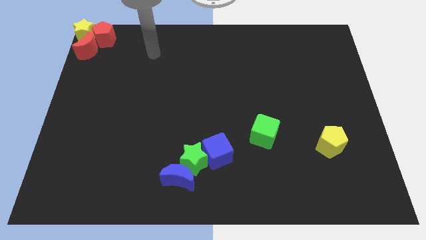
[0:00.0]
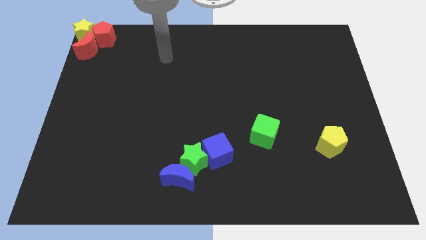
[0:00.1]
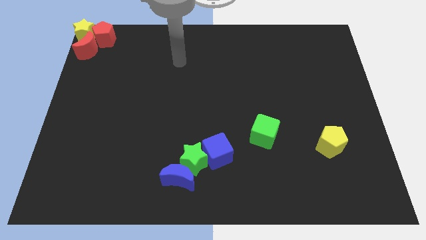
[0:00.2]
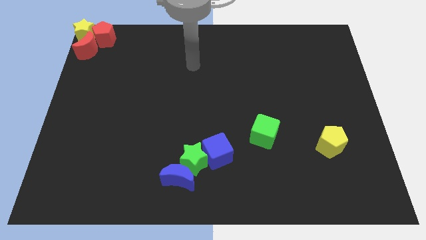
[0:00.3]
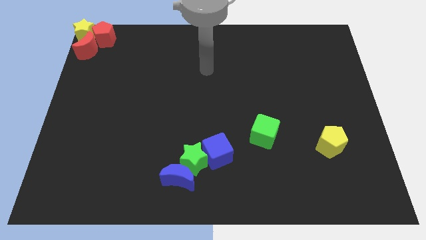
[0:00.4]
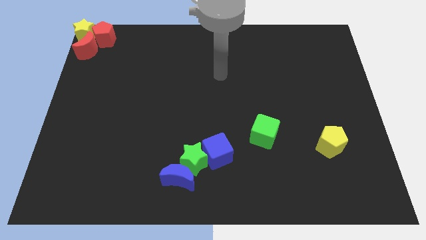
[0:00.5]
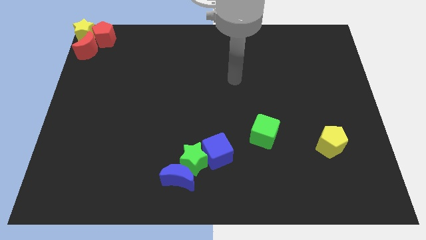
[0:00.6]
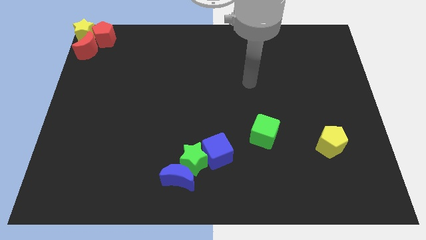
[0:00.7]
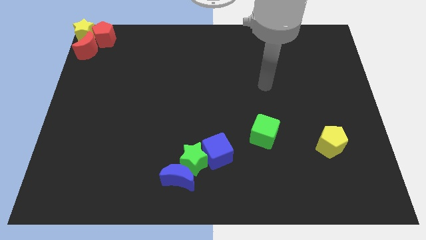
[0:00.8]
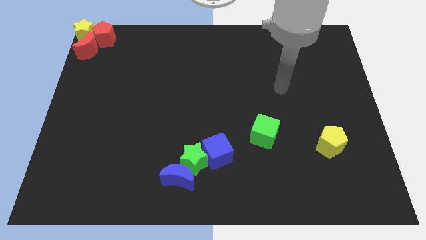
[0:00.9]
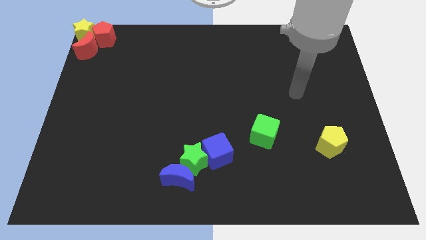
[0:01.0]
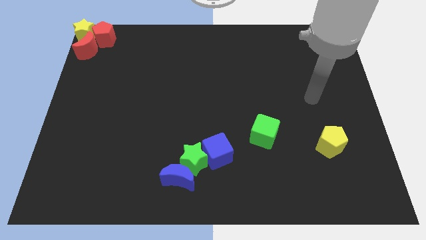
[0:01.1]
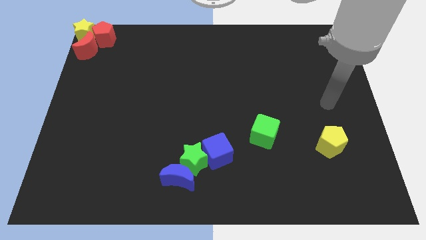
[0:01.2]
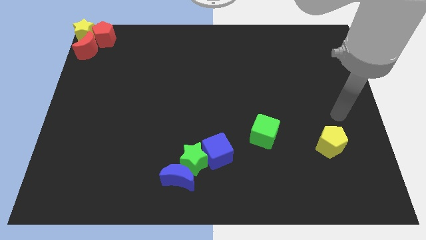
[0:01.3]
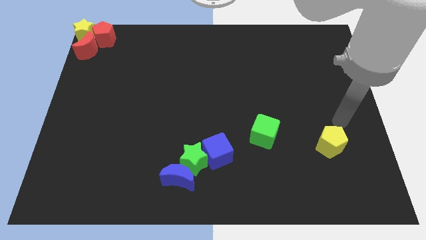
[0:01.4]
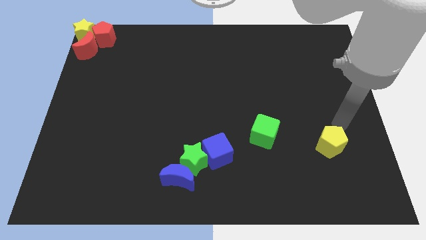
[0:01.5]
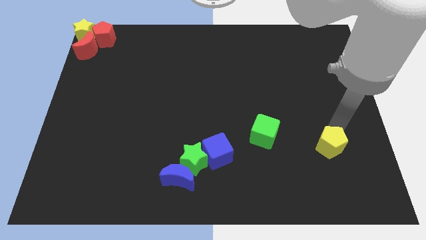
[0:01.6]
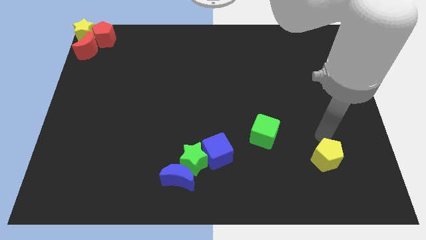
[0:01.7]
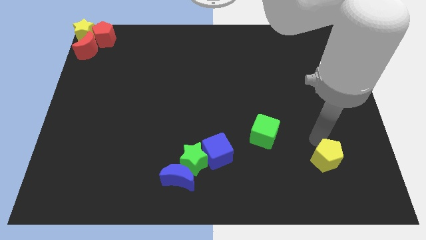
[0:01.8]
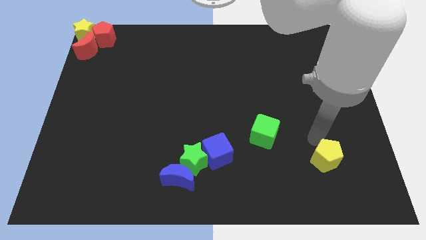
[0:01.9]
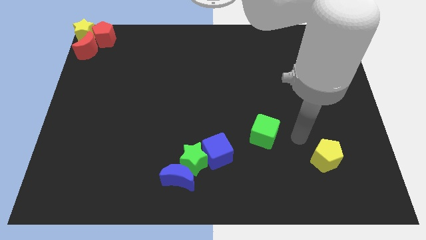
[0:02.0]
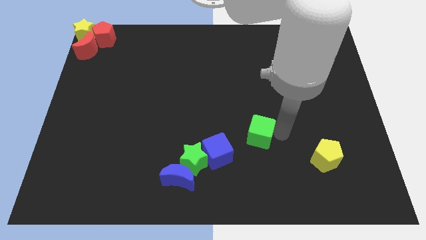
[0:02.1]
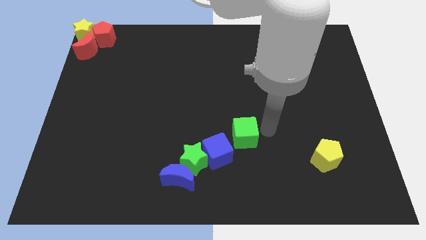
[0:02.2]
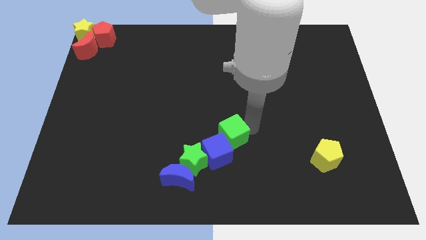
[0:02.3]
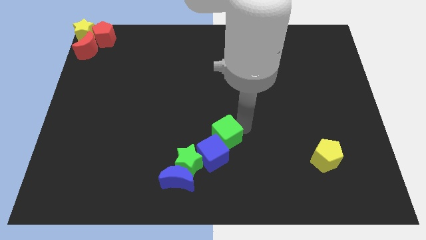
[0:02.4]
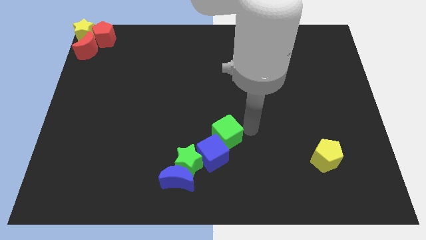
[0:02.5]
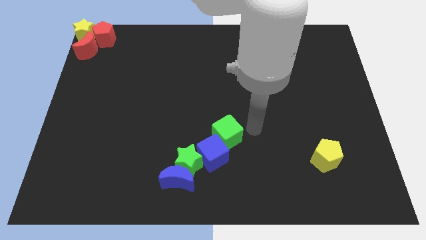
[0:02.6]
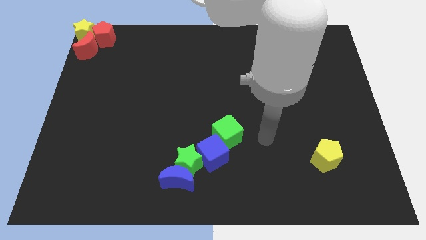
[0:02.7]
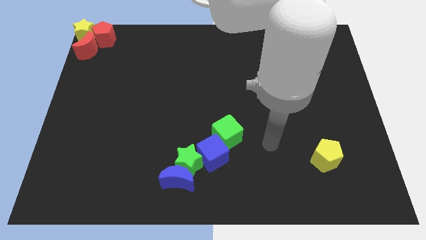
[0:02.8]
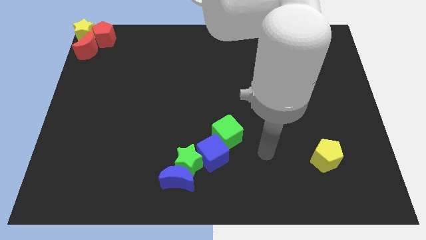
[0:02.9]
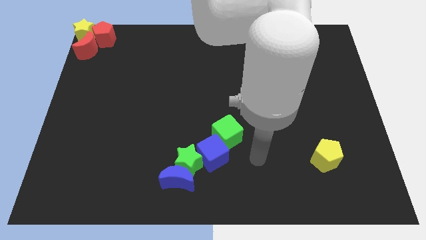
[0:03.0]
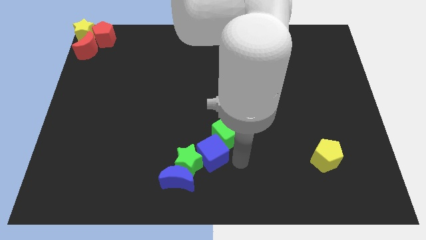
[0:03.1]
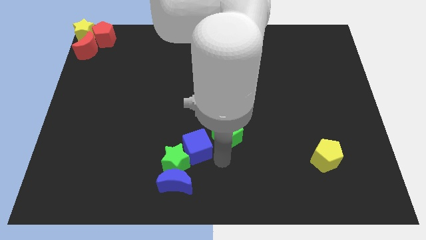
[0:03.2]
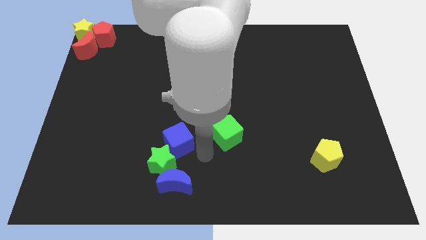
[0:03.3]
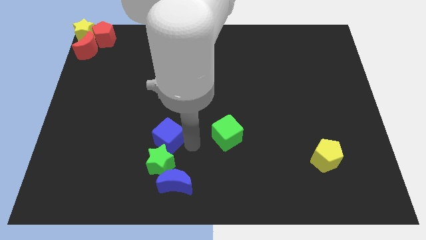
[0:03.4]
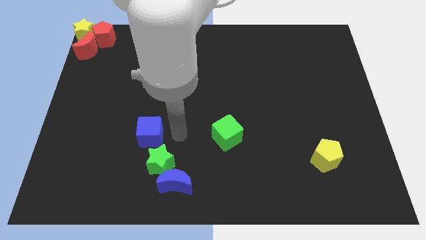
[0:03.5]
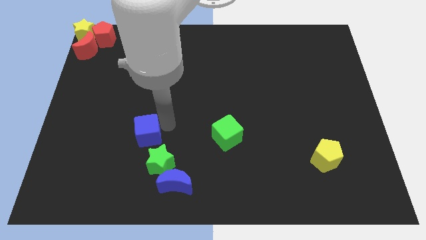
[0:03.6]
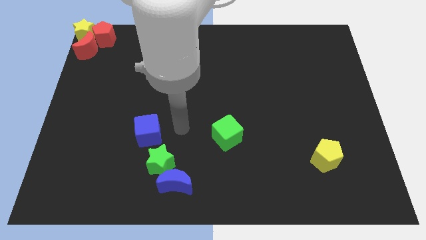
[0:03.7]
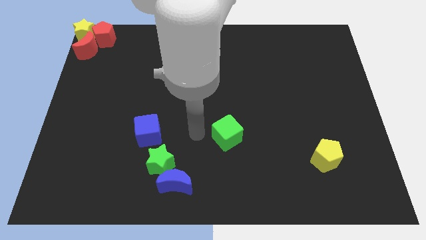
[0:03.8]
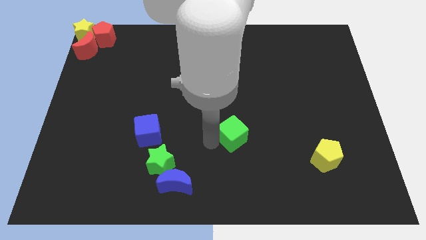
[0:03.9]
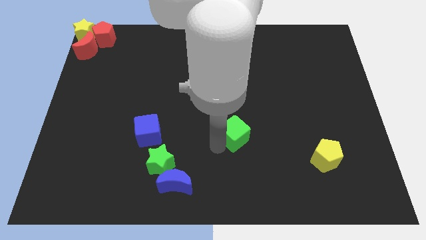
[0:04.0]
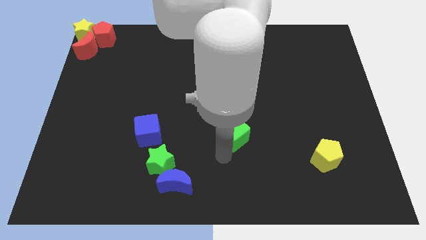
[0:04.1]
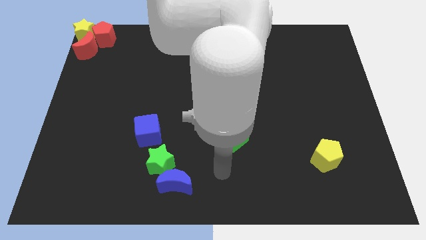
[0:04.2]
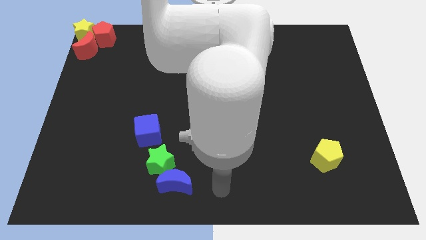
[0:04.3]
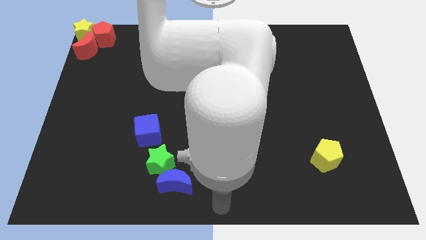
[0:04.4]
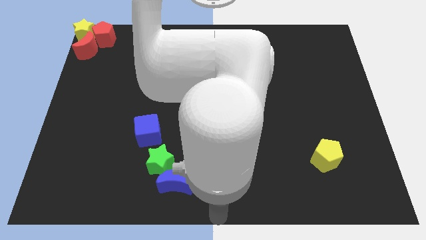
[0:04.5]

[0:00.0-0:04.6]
push green cube into the group of blocks

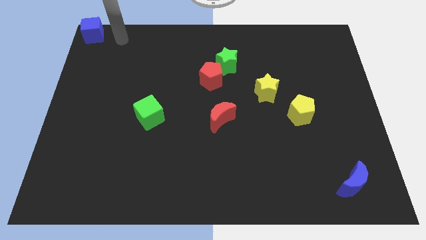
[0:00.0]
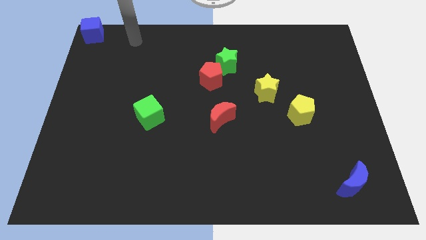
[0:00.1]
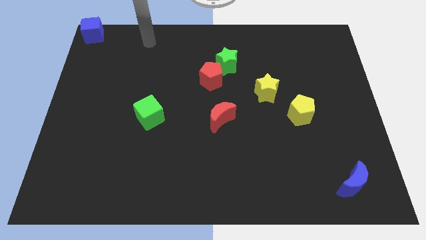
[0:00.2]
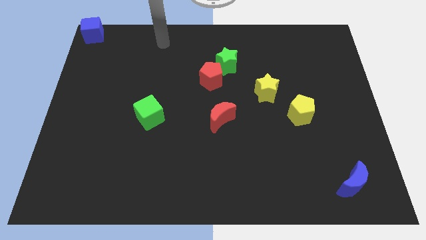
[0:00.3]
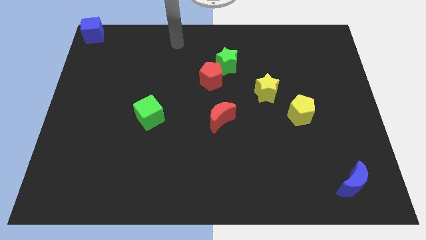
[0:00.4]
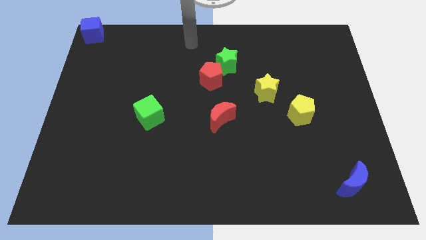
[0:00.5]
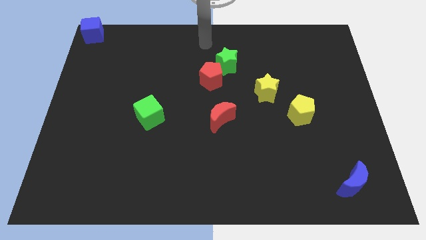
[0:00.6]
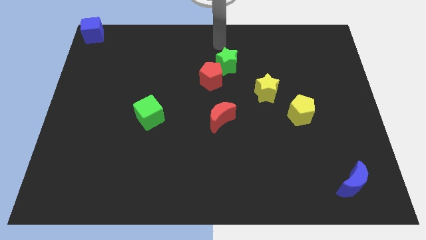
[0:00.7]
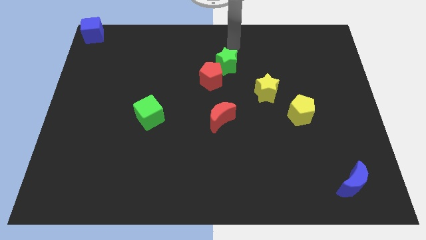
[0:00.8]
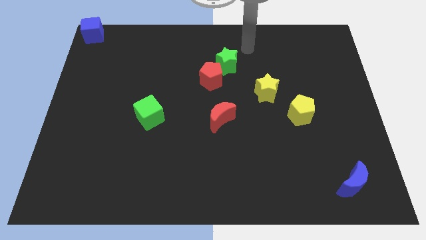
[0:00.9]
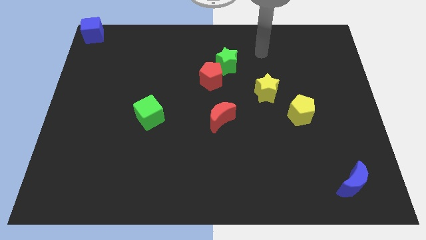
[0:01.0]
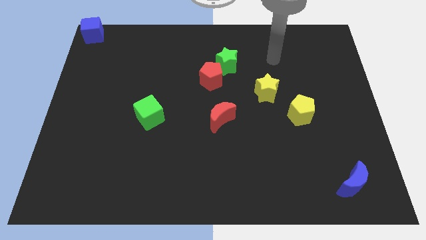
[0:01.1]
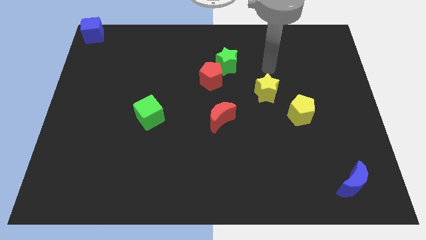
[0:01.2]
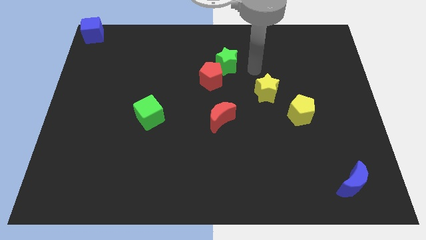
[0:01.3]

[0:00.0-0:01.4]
move your arm towards the yellow star

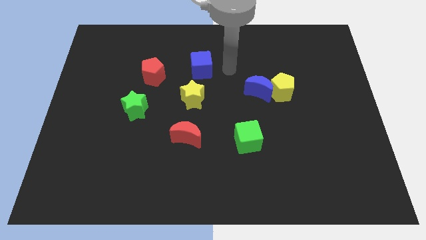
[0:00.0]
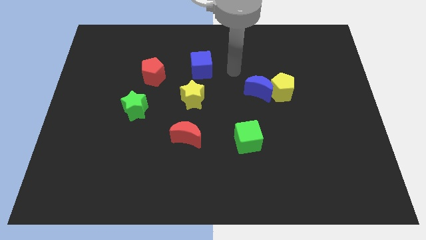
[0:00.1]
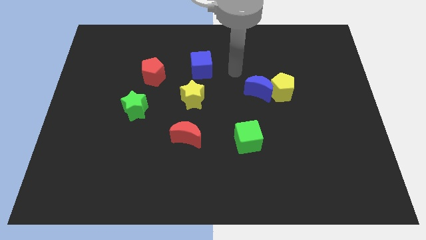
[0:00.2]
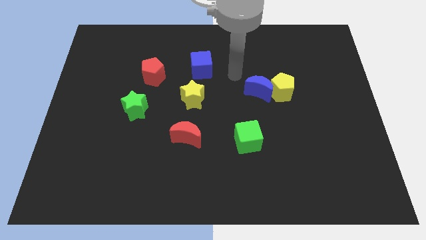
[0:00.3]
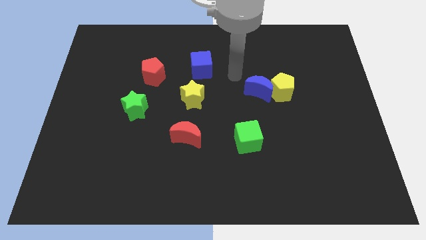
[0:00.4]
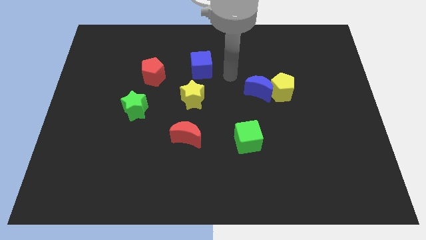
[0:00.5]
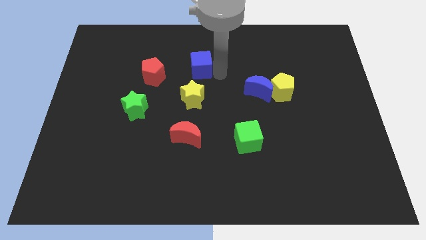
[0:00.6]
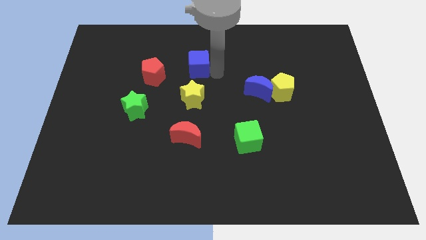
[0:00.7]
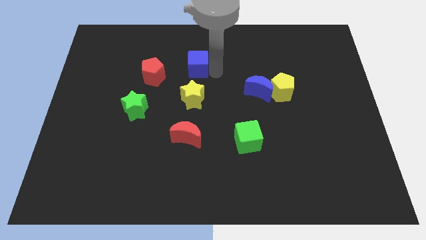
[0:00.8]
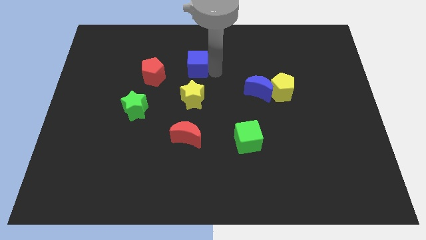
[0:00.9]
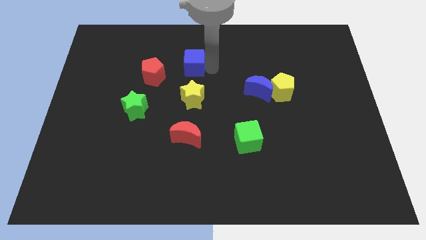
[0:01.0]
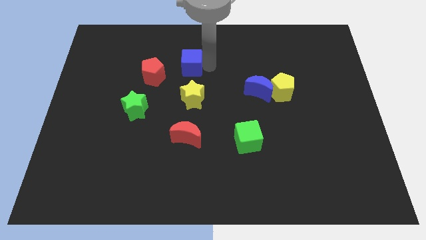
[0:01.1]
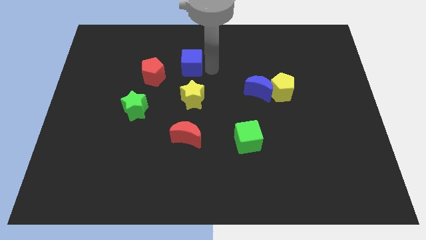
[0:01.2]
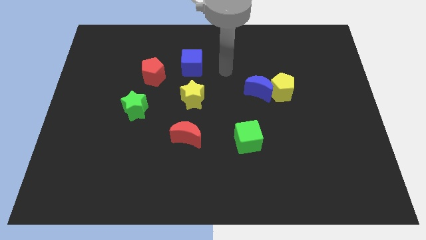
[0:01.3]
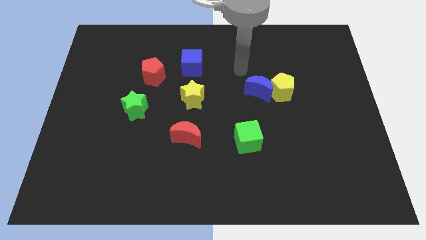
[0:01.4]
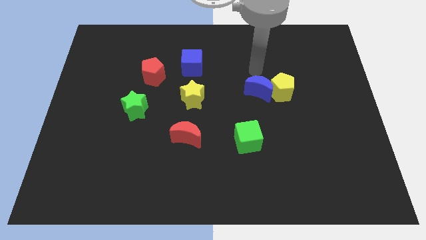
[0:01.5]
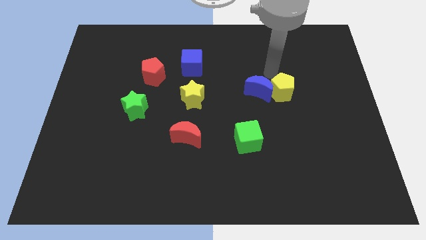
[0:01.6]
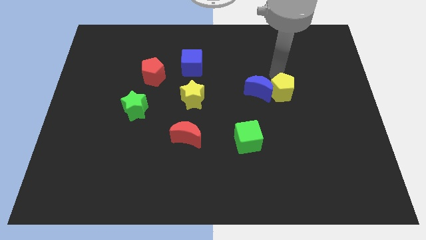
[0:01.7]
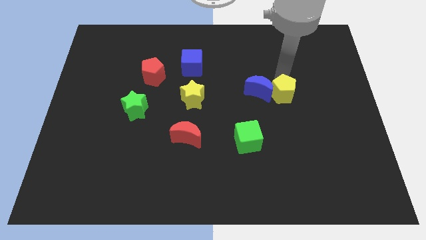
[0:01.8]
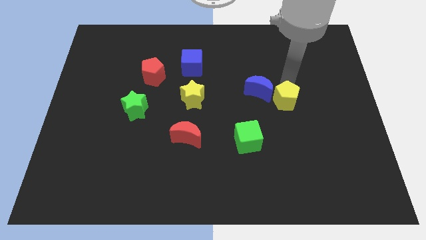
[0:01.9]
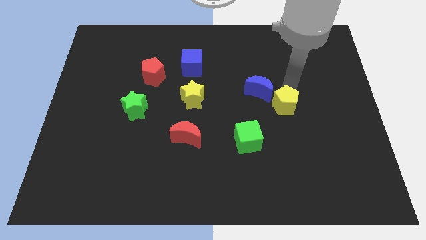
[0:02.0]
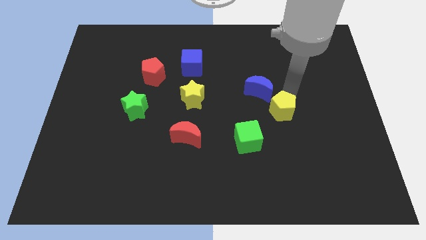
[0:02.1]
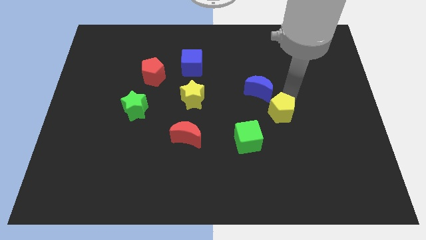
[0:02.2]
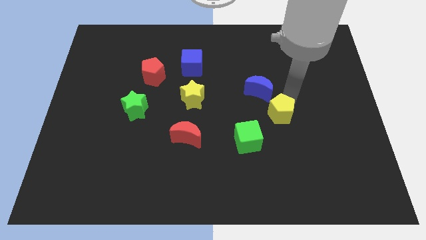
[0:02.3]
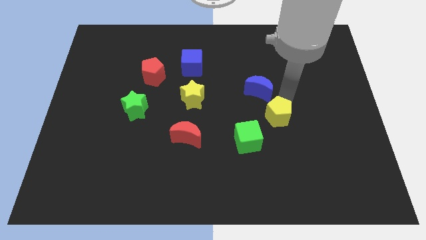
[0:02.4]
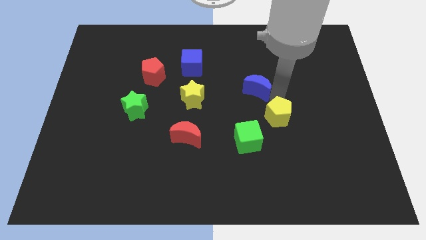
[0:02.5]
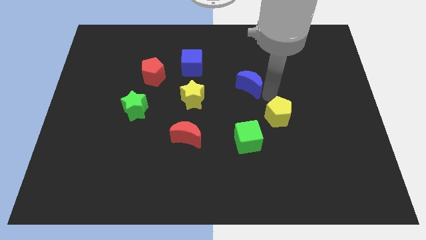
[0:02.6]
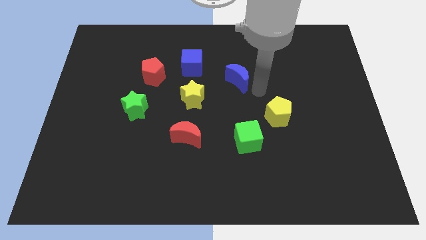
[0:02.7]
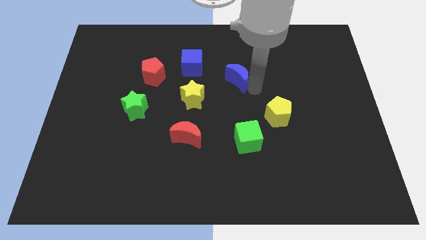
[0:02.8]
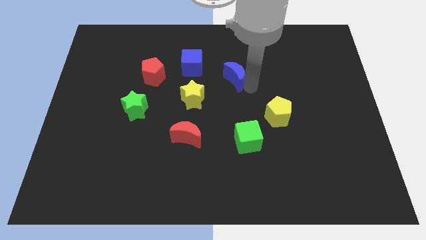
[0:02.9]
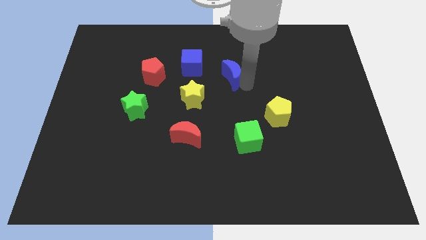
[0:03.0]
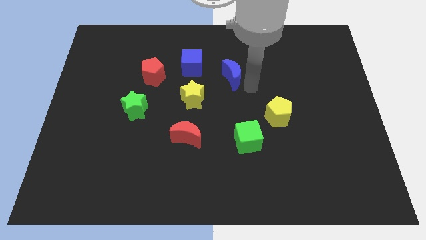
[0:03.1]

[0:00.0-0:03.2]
push blue crescent slightly towards top of the board
